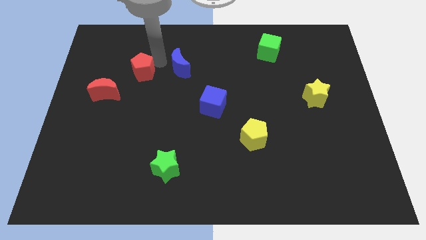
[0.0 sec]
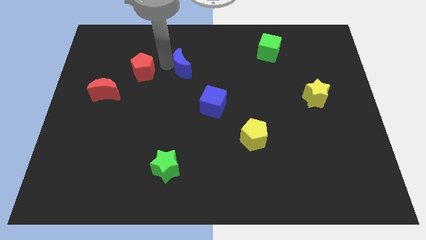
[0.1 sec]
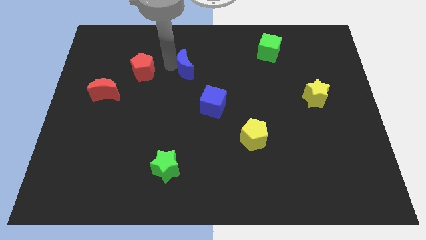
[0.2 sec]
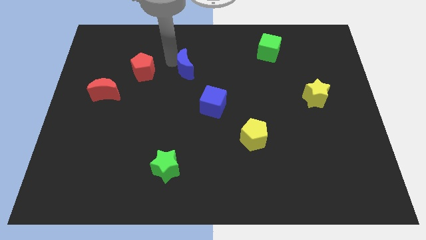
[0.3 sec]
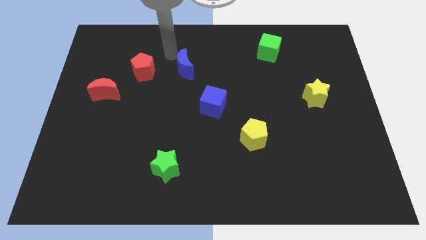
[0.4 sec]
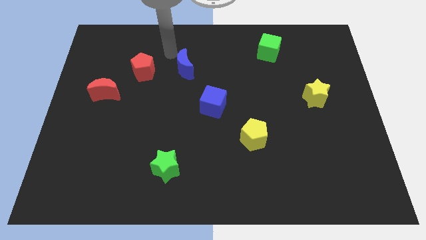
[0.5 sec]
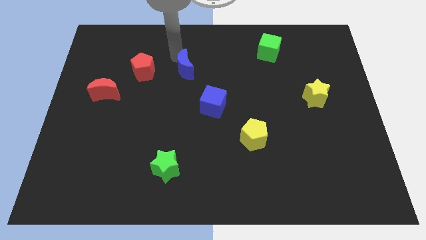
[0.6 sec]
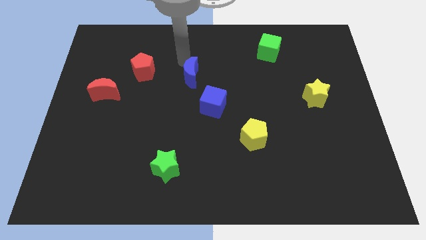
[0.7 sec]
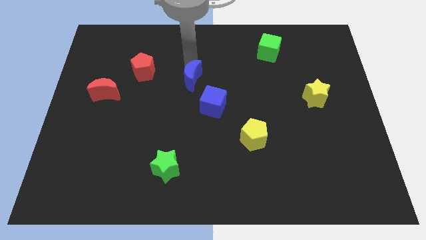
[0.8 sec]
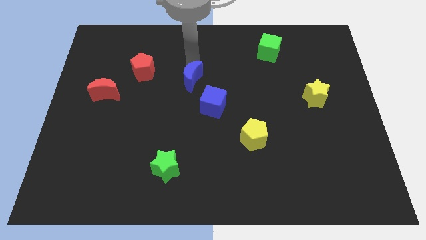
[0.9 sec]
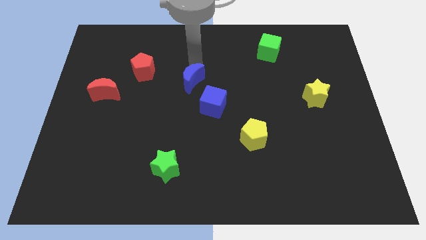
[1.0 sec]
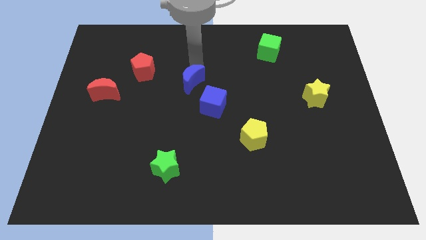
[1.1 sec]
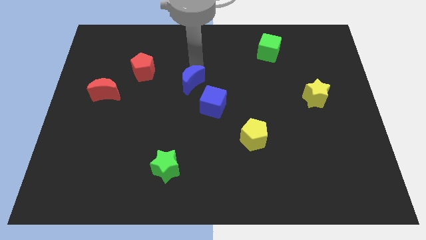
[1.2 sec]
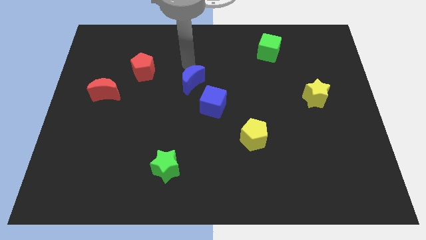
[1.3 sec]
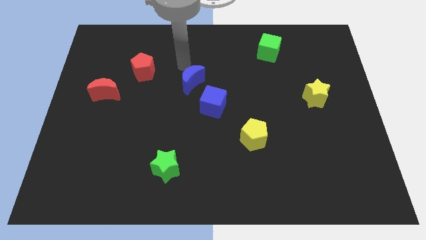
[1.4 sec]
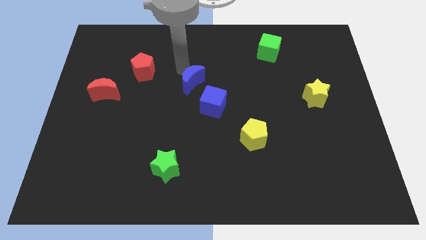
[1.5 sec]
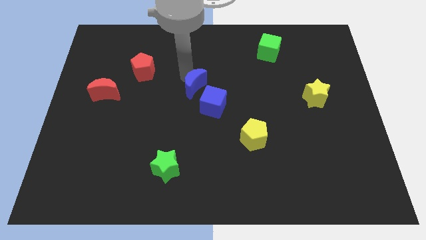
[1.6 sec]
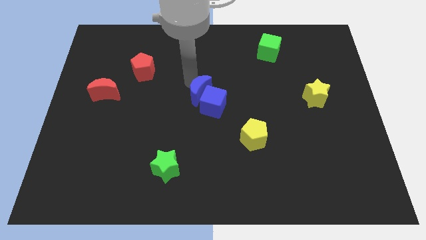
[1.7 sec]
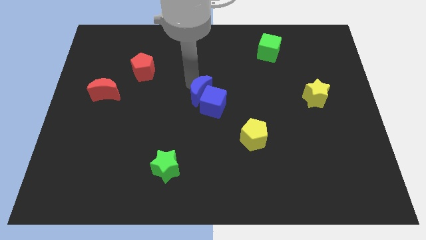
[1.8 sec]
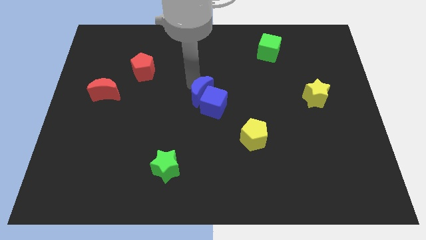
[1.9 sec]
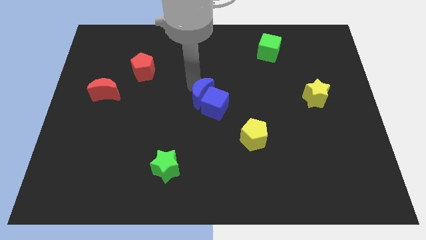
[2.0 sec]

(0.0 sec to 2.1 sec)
attach the blue moon to the blue cube

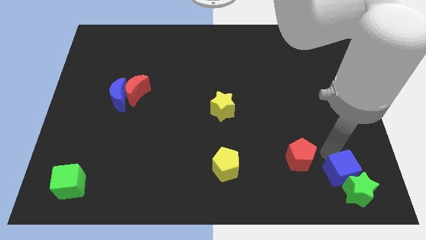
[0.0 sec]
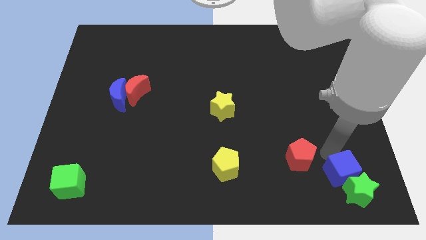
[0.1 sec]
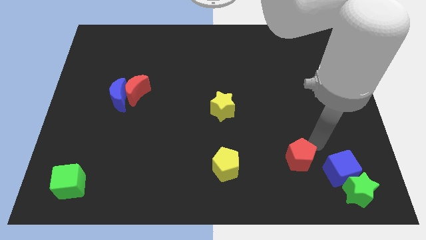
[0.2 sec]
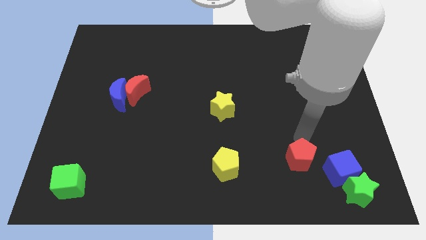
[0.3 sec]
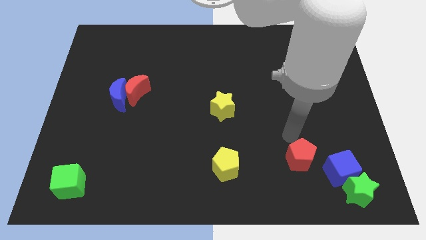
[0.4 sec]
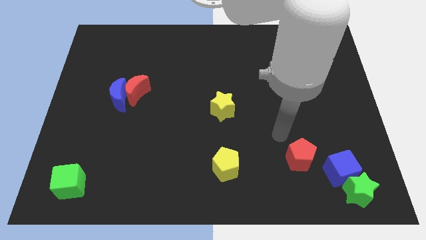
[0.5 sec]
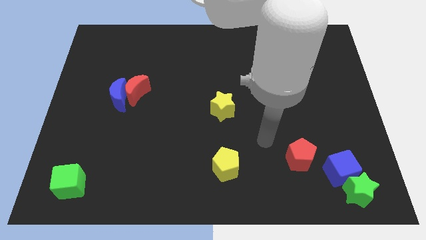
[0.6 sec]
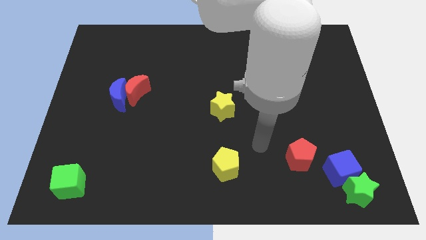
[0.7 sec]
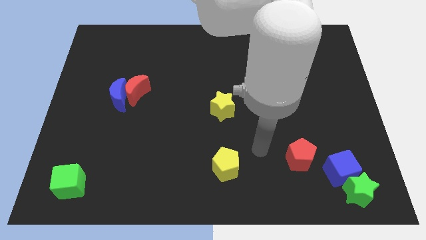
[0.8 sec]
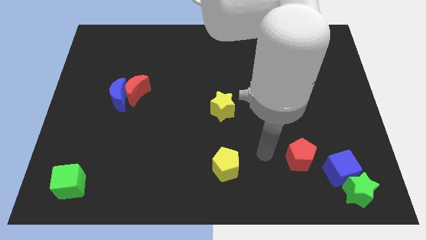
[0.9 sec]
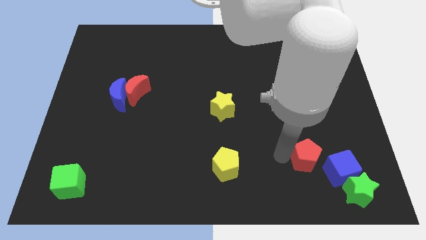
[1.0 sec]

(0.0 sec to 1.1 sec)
place your arm left to the red pentagon

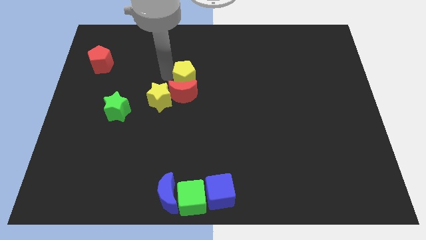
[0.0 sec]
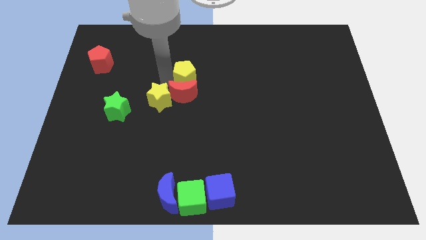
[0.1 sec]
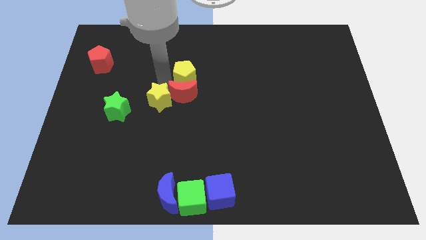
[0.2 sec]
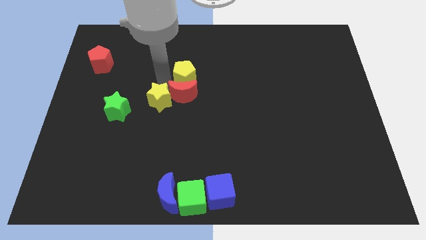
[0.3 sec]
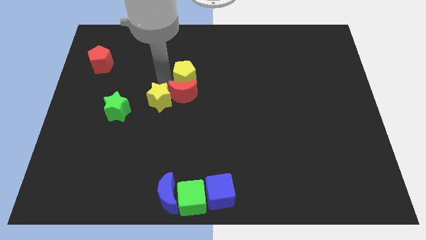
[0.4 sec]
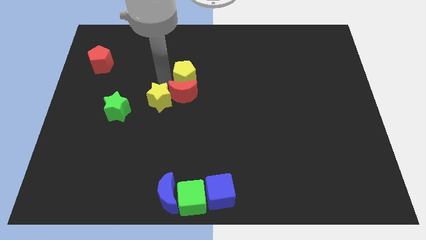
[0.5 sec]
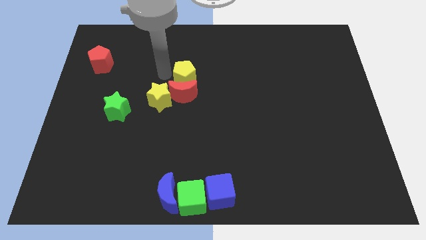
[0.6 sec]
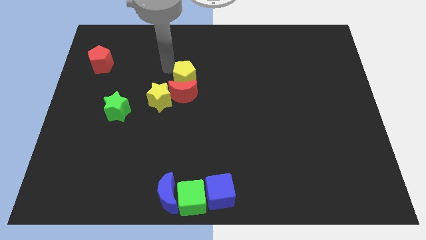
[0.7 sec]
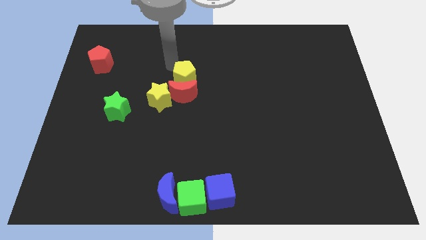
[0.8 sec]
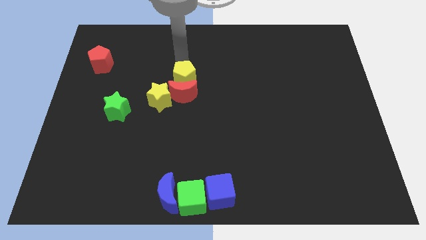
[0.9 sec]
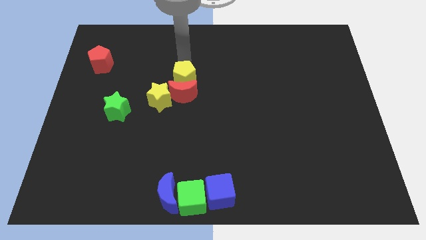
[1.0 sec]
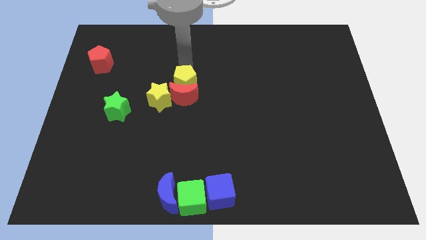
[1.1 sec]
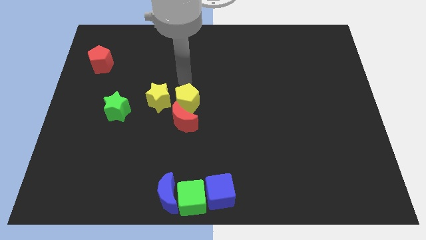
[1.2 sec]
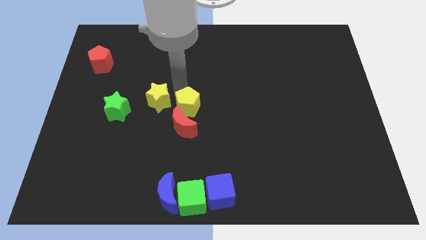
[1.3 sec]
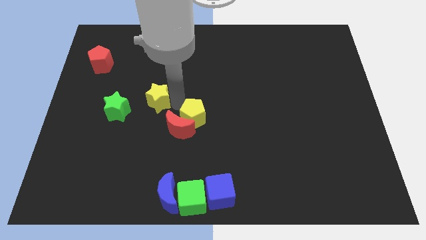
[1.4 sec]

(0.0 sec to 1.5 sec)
separate the yellow pentagon and red crescent from the yellow star

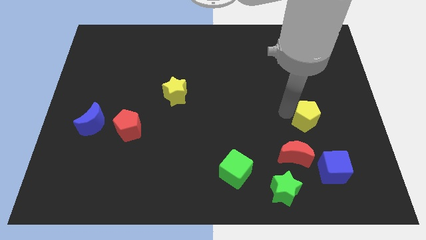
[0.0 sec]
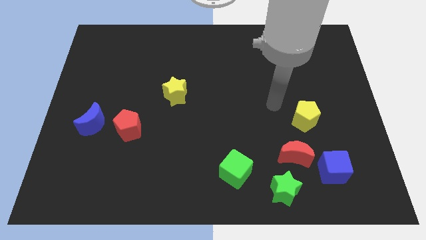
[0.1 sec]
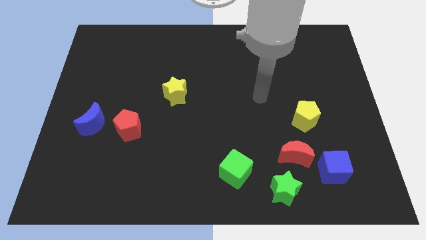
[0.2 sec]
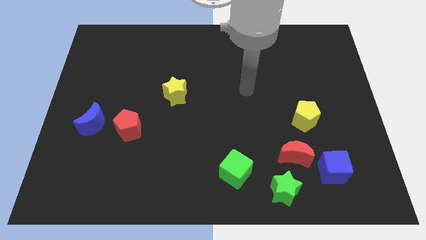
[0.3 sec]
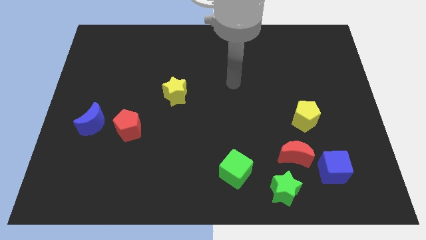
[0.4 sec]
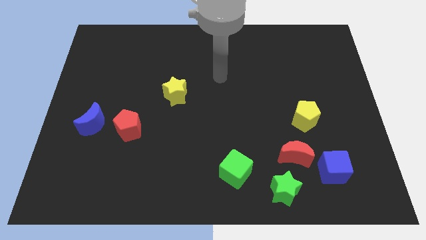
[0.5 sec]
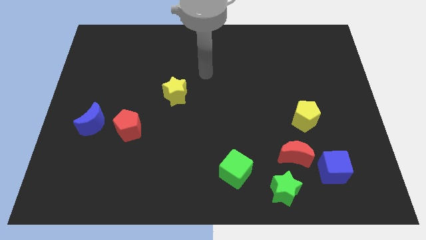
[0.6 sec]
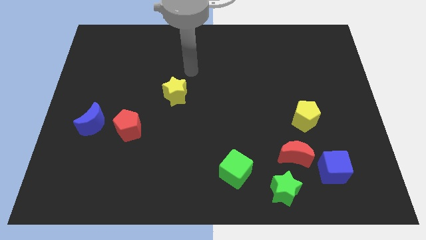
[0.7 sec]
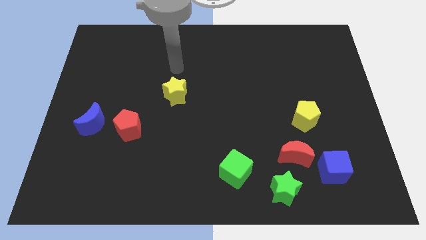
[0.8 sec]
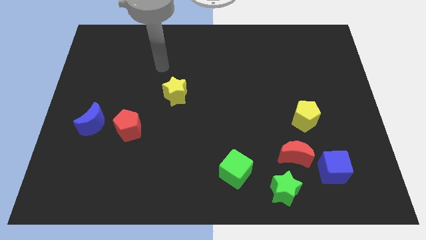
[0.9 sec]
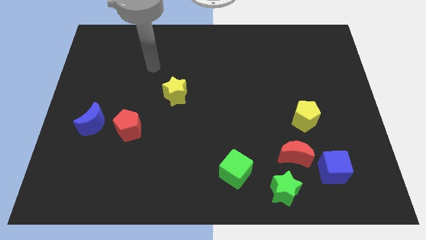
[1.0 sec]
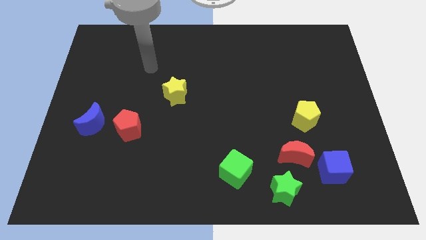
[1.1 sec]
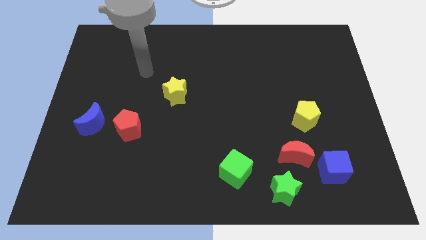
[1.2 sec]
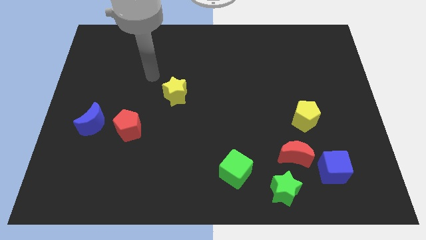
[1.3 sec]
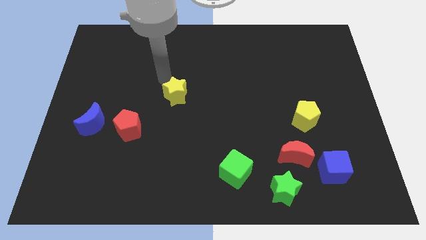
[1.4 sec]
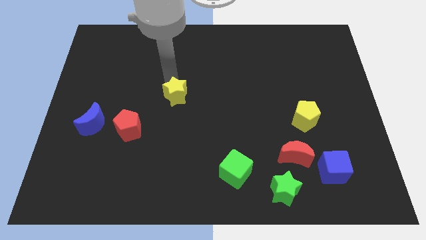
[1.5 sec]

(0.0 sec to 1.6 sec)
move the arm to the top of the yellow star

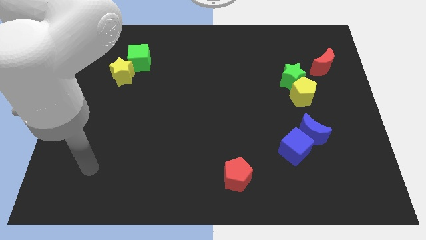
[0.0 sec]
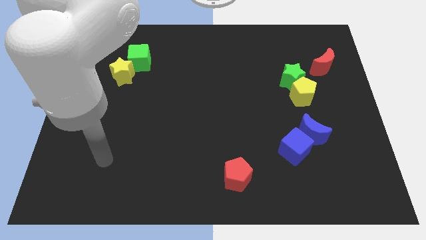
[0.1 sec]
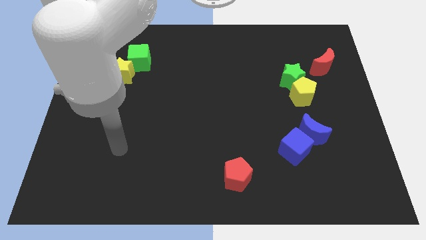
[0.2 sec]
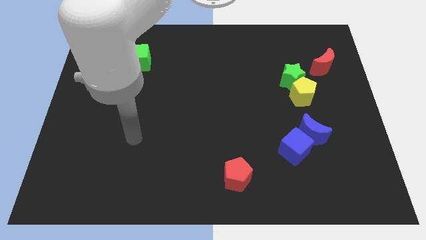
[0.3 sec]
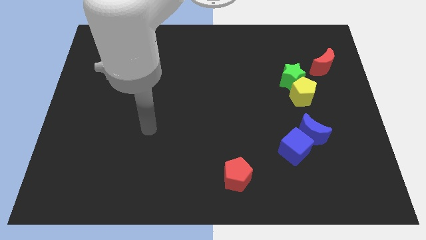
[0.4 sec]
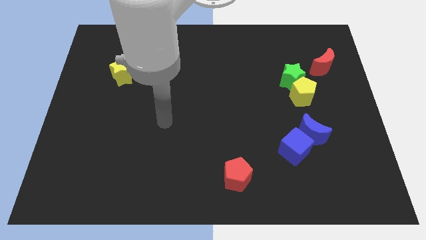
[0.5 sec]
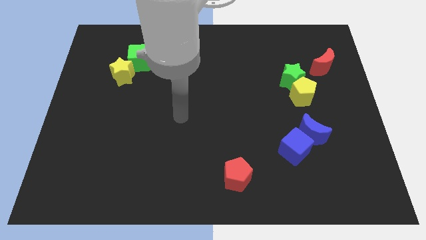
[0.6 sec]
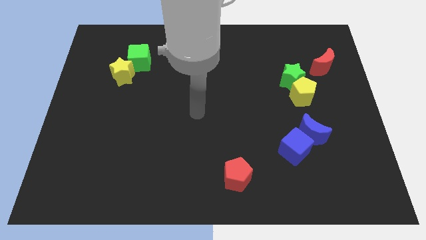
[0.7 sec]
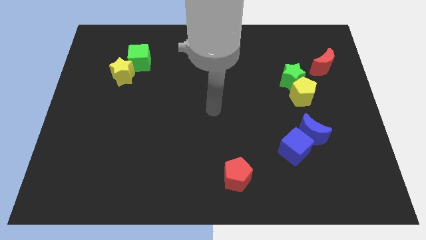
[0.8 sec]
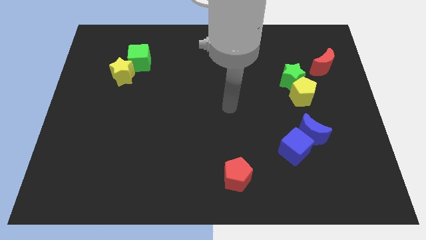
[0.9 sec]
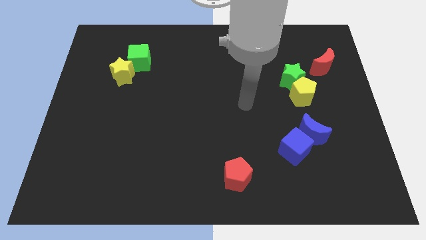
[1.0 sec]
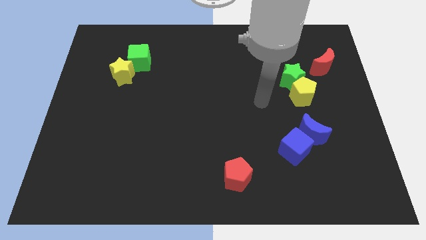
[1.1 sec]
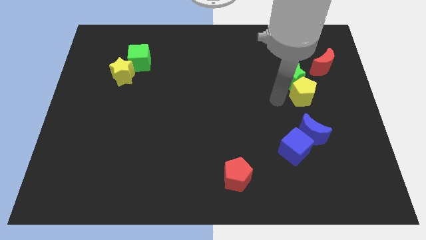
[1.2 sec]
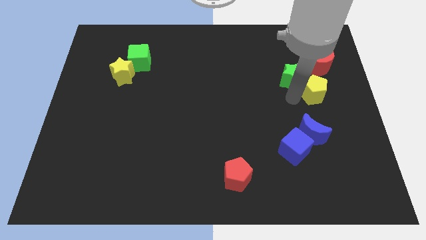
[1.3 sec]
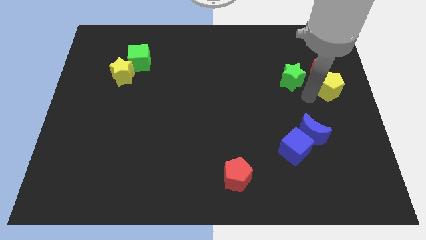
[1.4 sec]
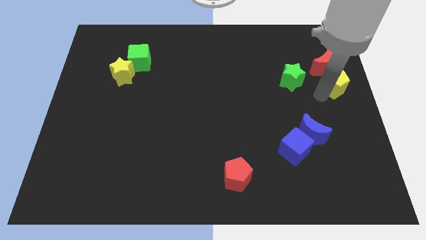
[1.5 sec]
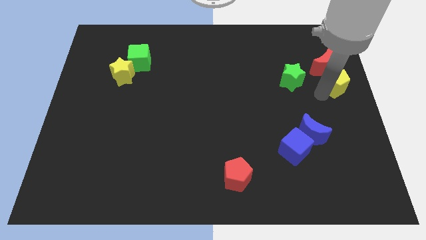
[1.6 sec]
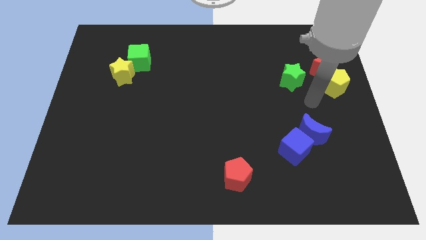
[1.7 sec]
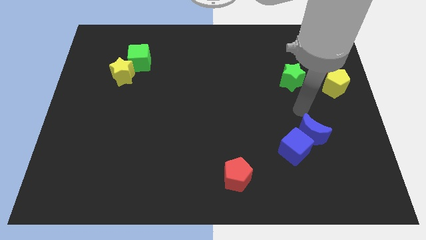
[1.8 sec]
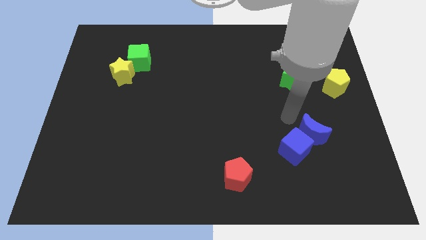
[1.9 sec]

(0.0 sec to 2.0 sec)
separate the yellow pentagon from the green star

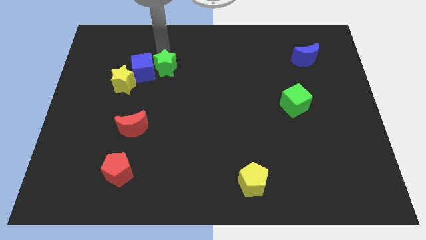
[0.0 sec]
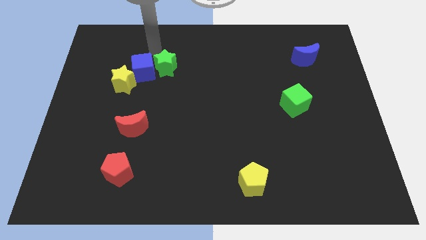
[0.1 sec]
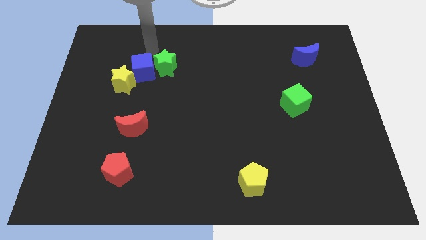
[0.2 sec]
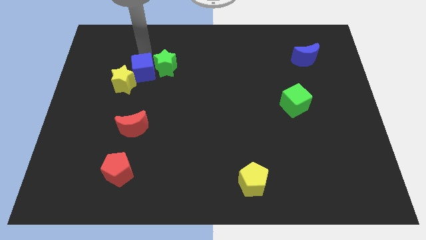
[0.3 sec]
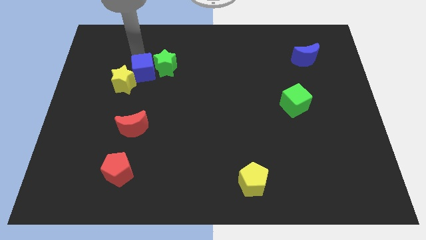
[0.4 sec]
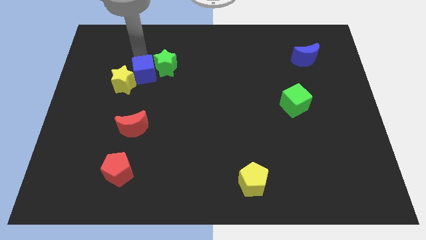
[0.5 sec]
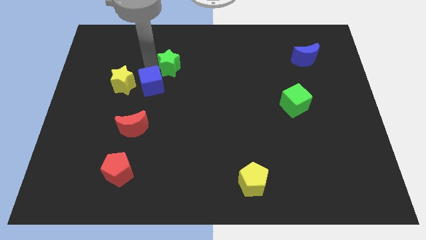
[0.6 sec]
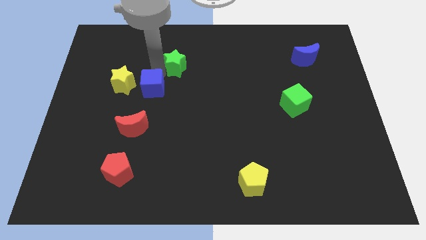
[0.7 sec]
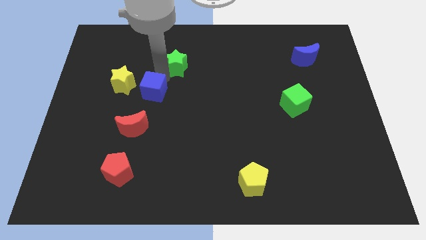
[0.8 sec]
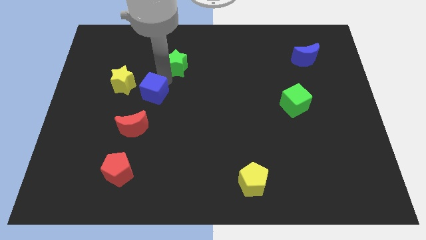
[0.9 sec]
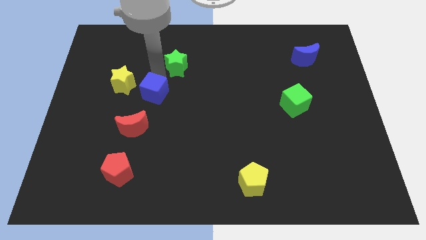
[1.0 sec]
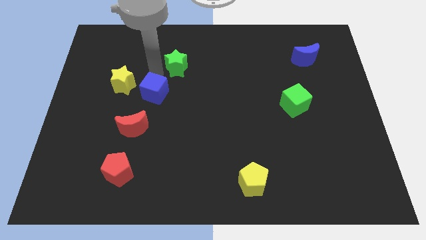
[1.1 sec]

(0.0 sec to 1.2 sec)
move the blue cube towards down
